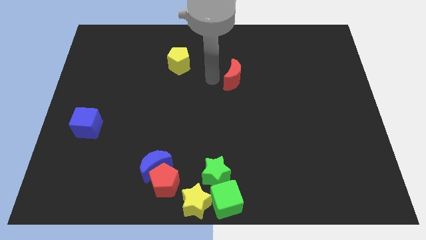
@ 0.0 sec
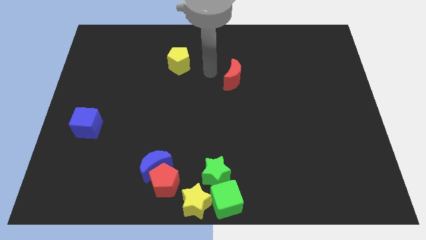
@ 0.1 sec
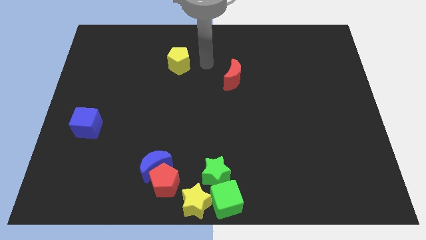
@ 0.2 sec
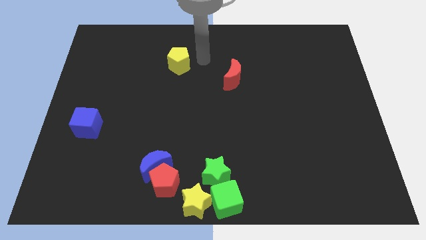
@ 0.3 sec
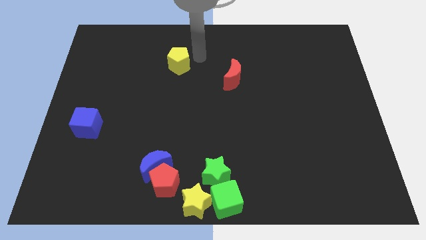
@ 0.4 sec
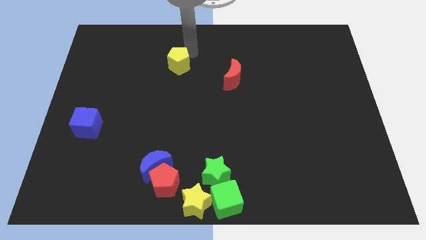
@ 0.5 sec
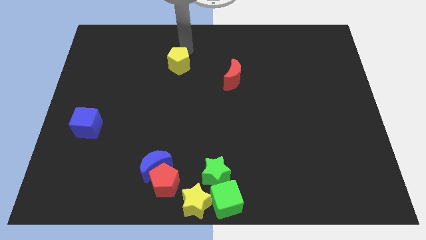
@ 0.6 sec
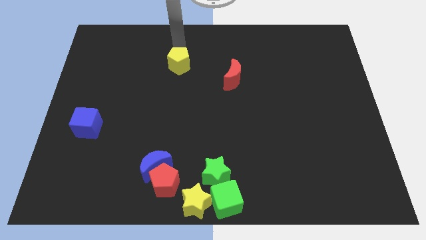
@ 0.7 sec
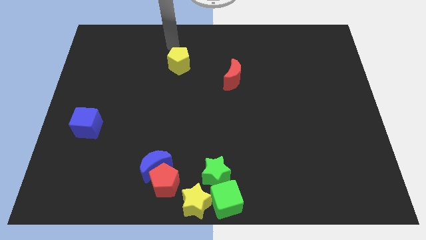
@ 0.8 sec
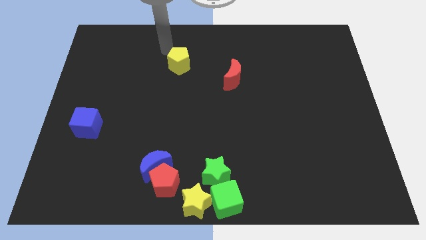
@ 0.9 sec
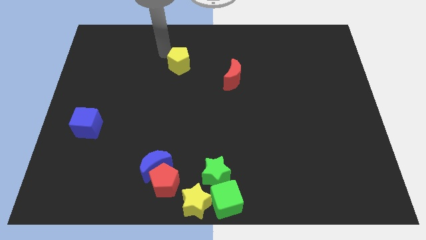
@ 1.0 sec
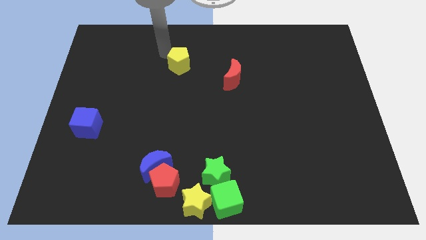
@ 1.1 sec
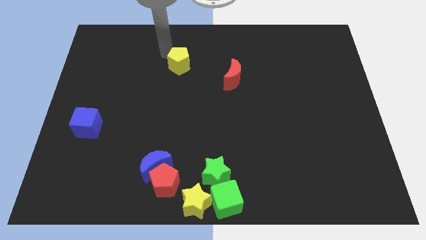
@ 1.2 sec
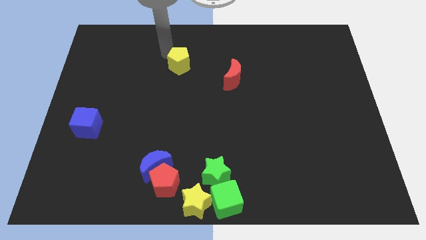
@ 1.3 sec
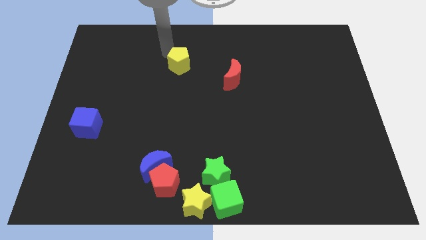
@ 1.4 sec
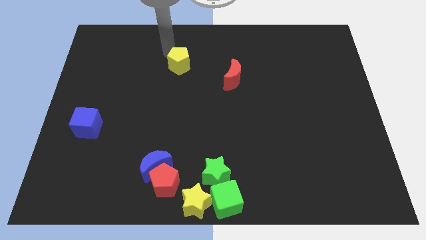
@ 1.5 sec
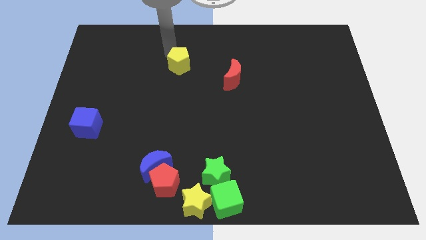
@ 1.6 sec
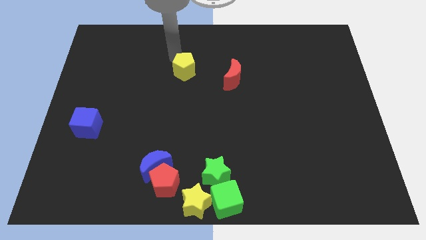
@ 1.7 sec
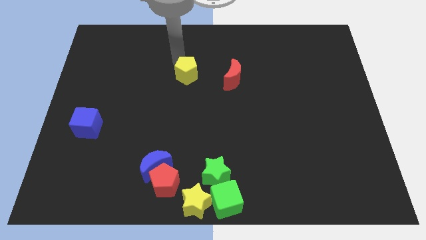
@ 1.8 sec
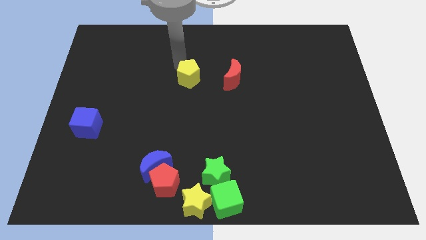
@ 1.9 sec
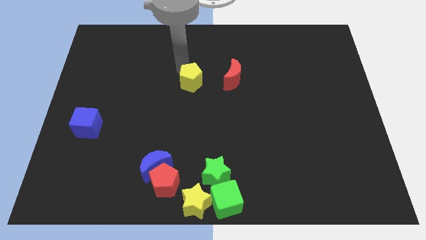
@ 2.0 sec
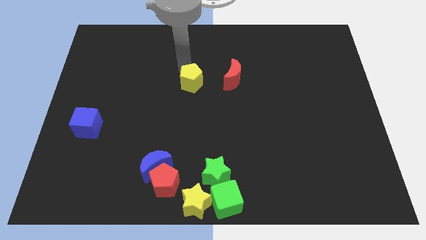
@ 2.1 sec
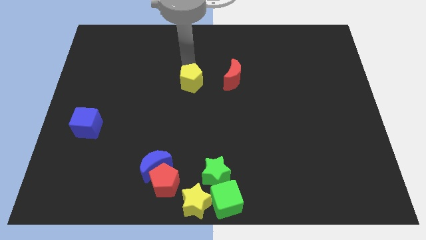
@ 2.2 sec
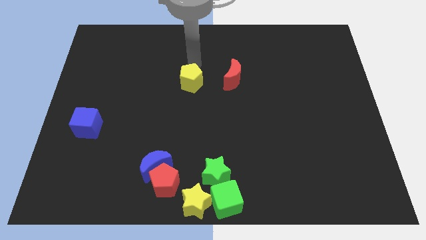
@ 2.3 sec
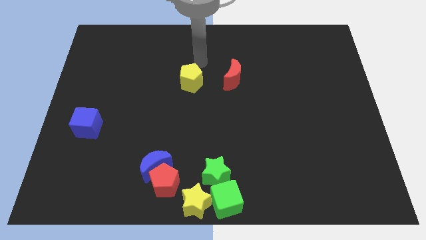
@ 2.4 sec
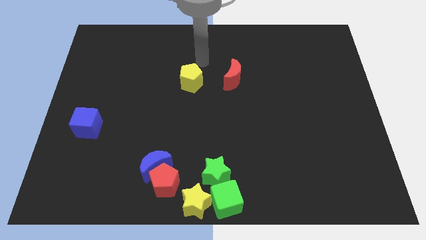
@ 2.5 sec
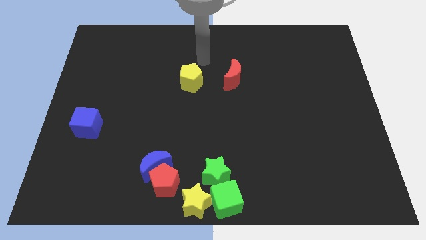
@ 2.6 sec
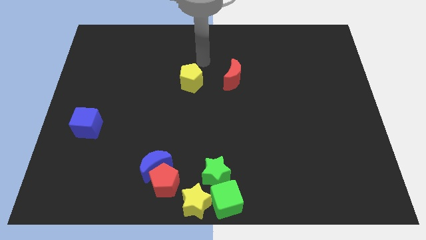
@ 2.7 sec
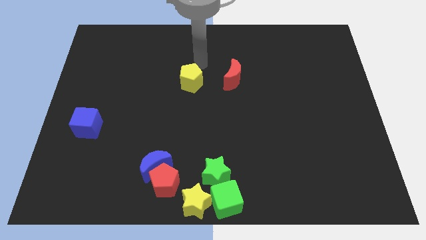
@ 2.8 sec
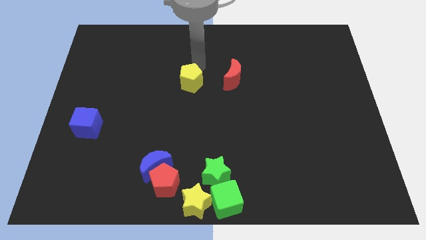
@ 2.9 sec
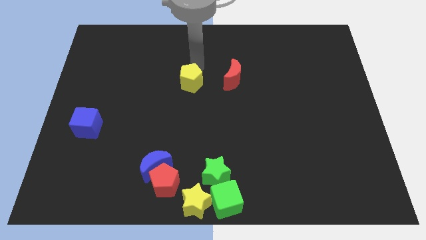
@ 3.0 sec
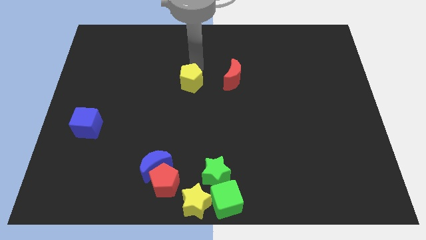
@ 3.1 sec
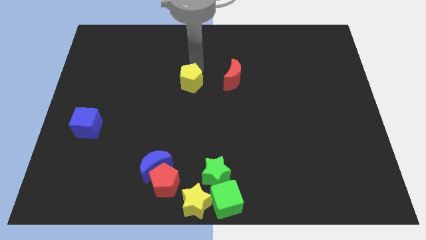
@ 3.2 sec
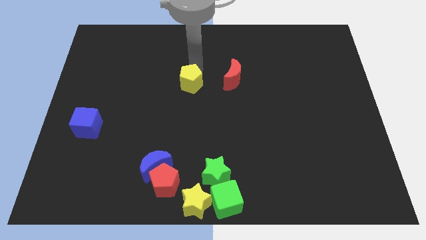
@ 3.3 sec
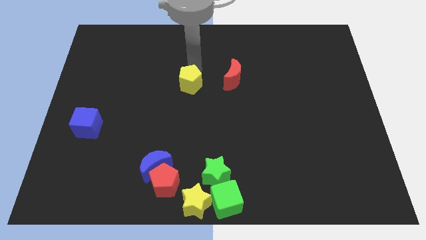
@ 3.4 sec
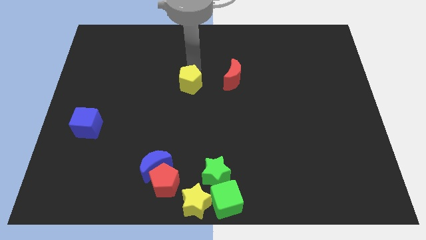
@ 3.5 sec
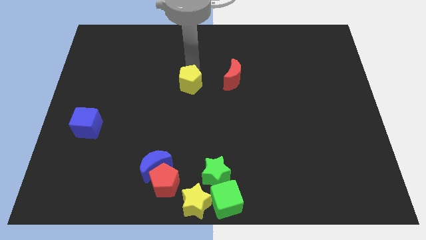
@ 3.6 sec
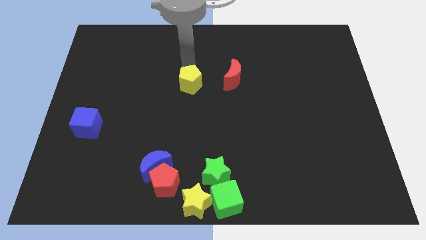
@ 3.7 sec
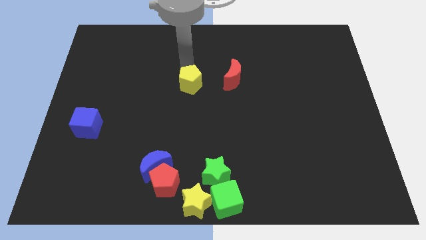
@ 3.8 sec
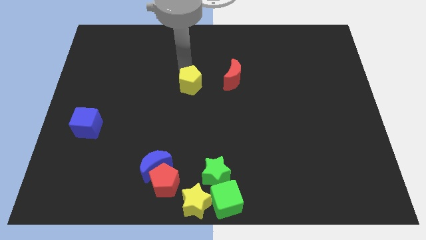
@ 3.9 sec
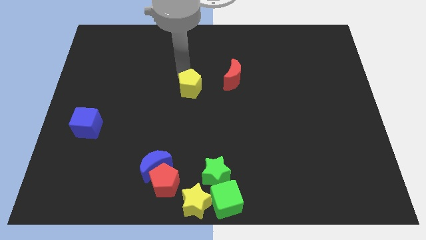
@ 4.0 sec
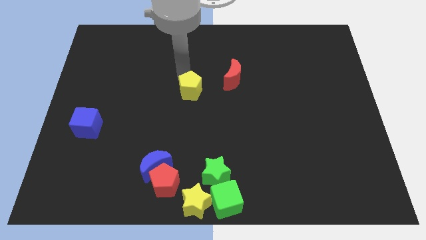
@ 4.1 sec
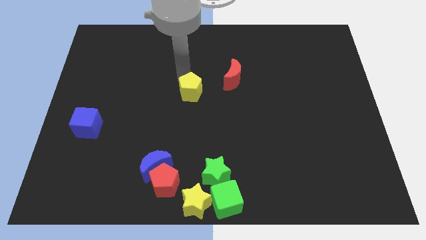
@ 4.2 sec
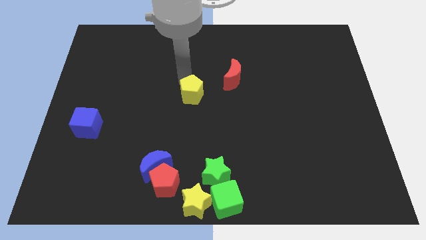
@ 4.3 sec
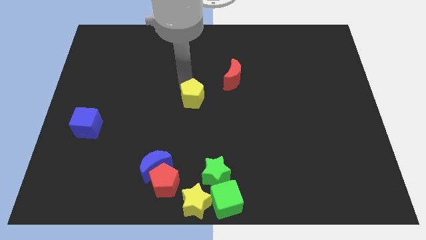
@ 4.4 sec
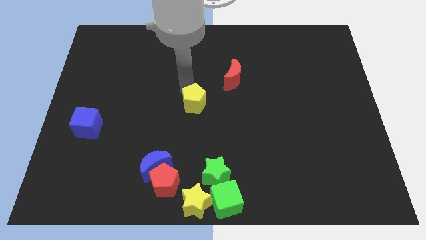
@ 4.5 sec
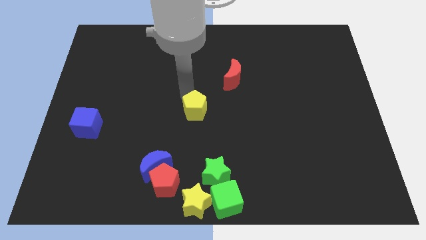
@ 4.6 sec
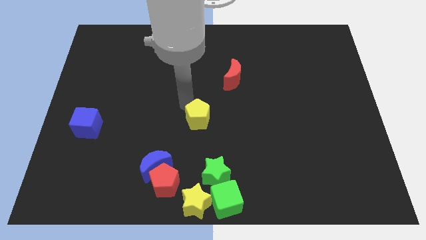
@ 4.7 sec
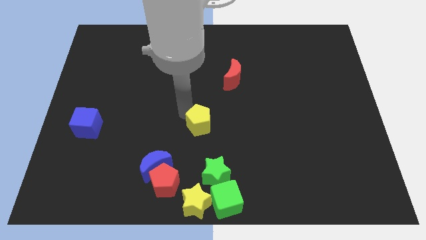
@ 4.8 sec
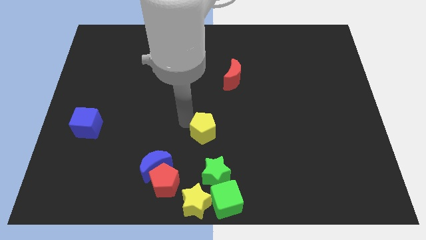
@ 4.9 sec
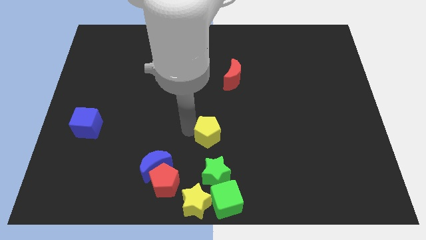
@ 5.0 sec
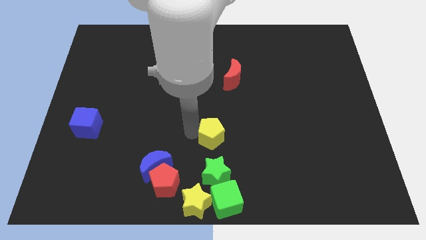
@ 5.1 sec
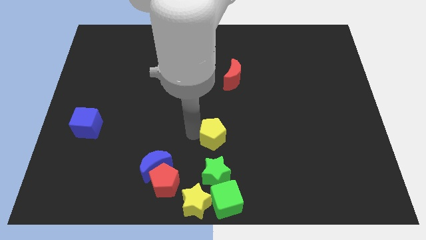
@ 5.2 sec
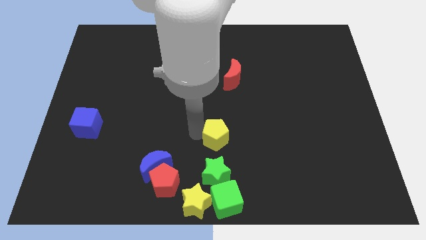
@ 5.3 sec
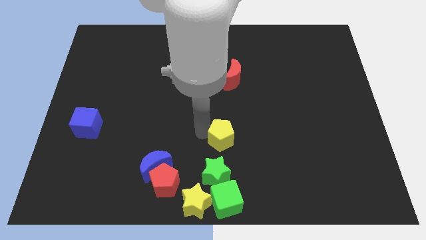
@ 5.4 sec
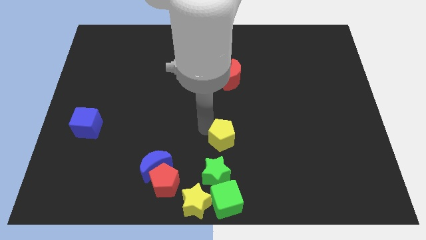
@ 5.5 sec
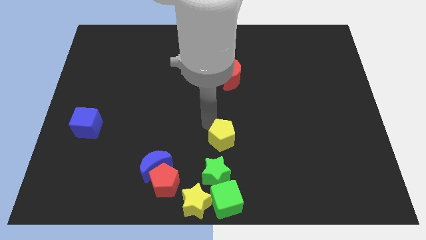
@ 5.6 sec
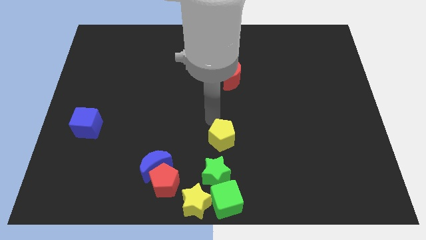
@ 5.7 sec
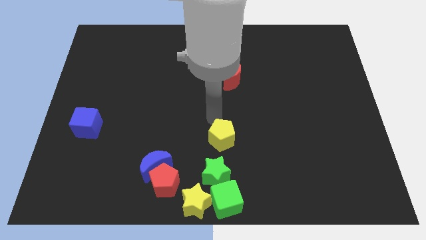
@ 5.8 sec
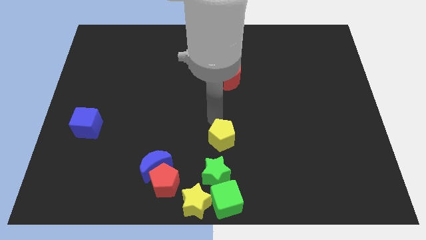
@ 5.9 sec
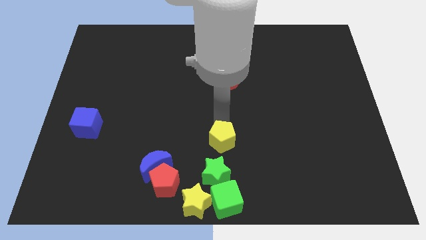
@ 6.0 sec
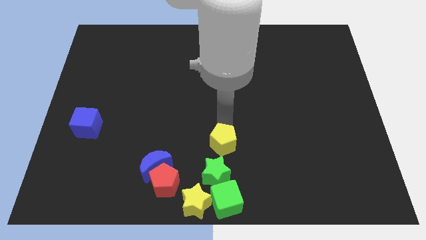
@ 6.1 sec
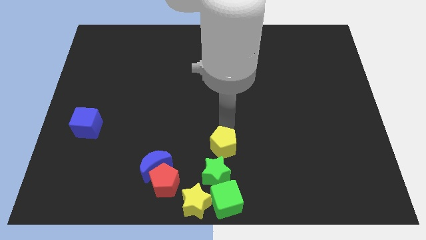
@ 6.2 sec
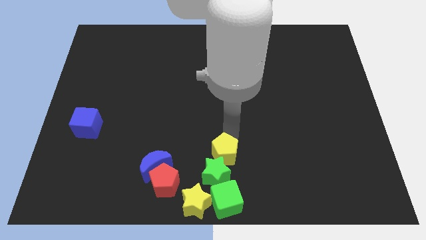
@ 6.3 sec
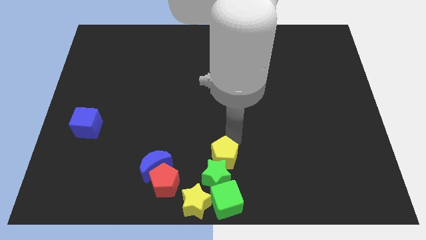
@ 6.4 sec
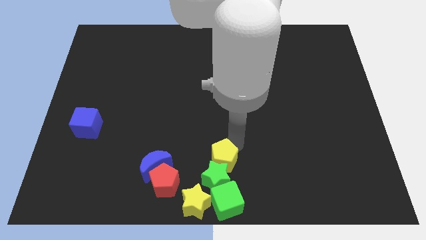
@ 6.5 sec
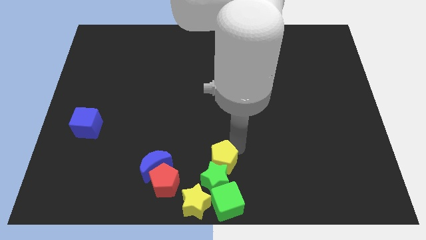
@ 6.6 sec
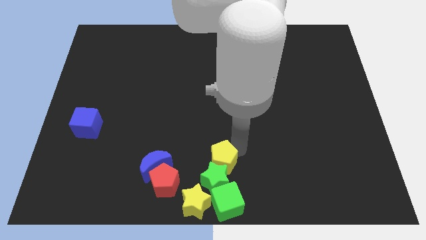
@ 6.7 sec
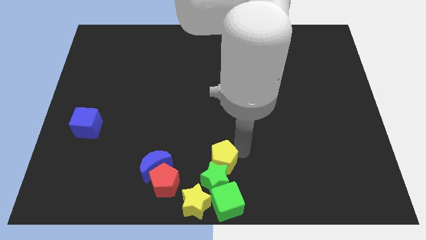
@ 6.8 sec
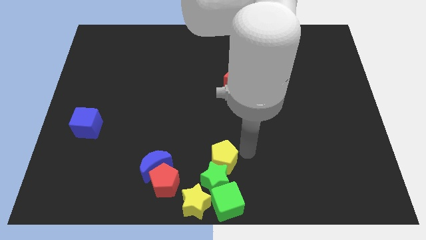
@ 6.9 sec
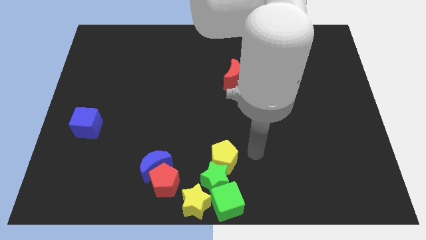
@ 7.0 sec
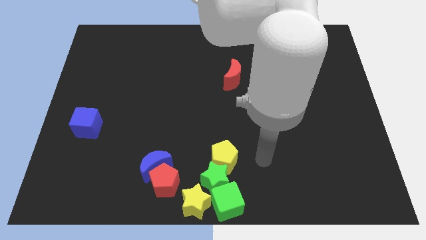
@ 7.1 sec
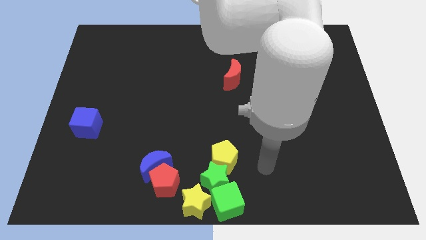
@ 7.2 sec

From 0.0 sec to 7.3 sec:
place the yellow pentagon up to the green star

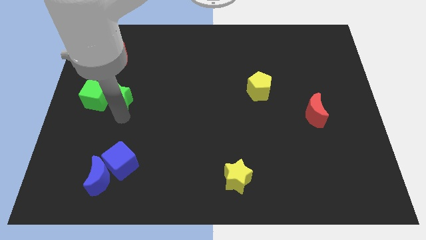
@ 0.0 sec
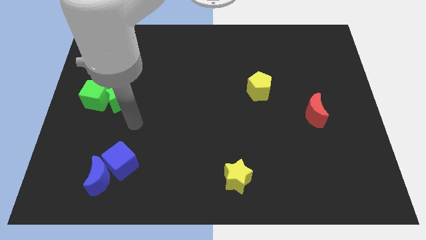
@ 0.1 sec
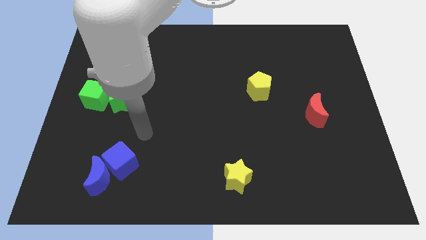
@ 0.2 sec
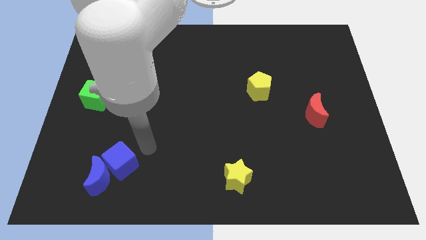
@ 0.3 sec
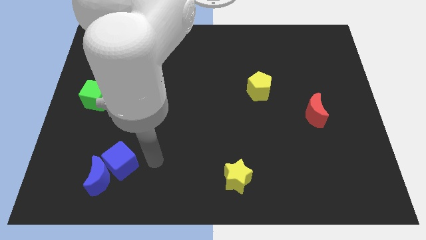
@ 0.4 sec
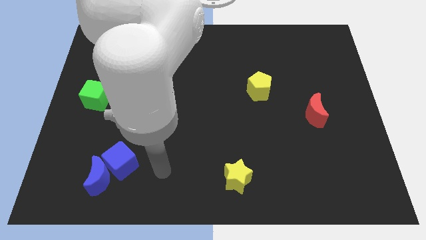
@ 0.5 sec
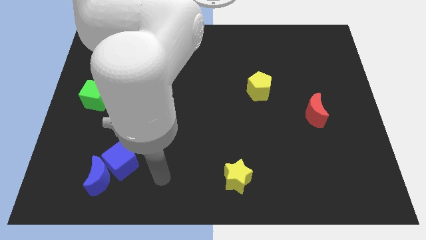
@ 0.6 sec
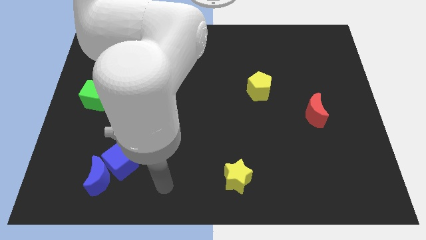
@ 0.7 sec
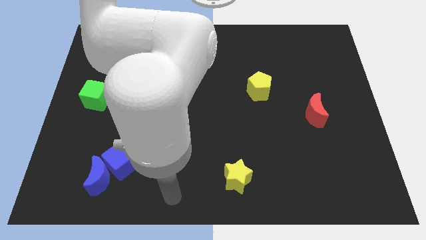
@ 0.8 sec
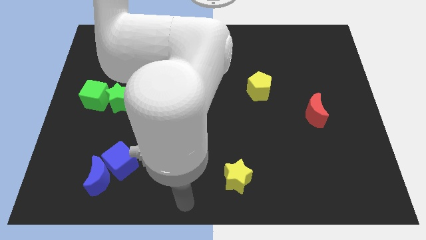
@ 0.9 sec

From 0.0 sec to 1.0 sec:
move the arm away from the green star

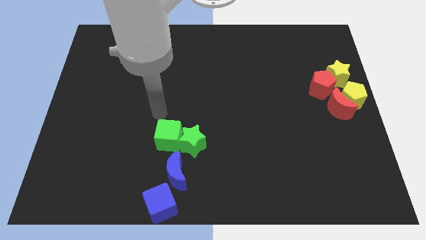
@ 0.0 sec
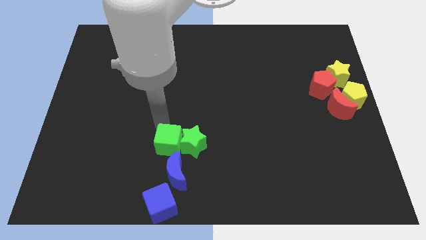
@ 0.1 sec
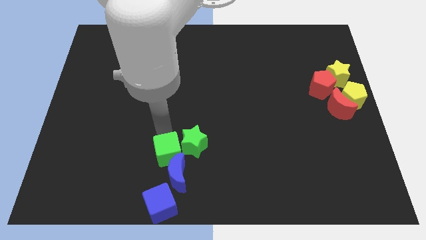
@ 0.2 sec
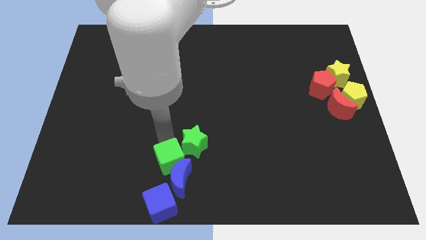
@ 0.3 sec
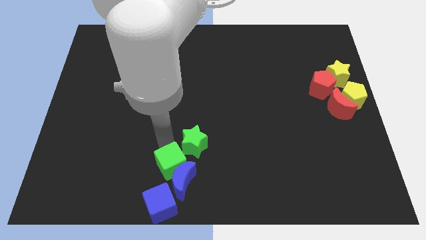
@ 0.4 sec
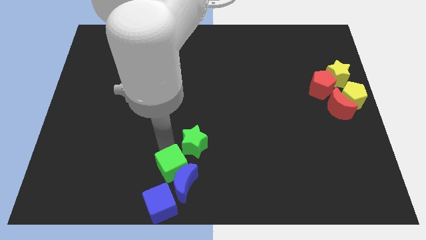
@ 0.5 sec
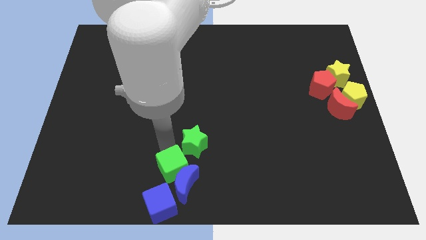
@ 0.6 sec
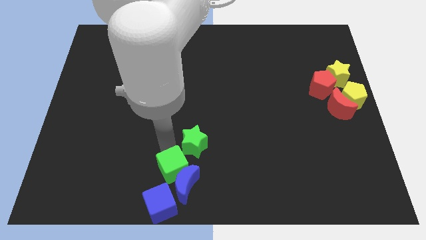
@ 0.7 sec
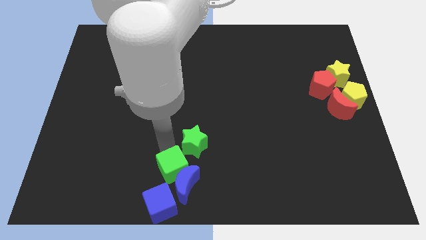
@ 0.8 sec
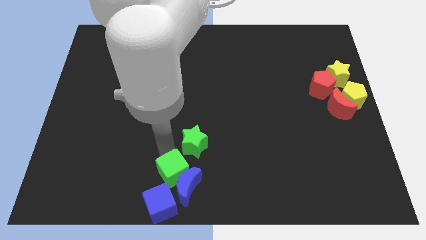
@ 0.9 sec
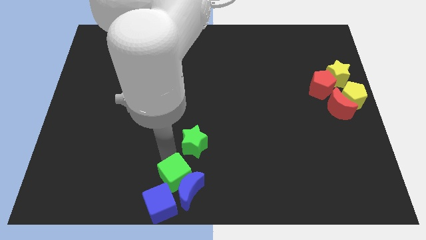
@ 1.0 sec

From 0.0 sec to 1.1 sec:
push the green cube into the blue crescent
